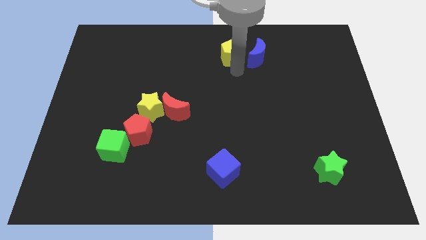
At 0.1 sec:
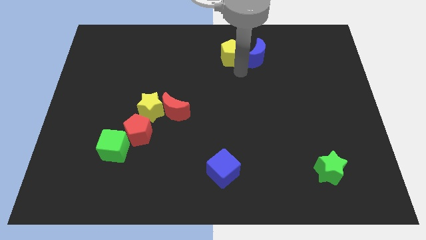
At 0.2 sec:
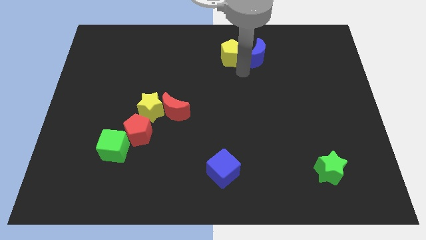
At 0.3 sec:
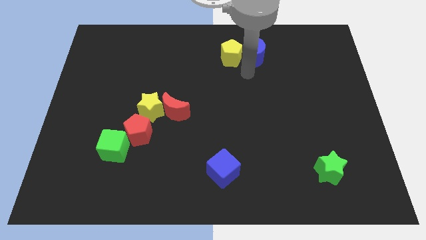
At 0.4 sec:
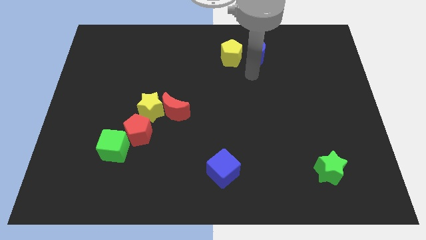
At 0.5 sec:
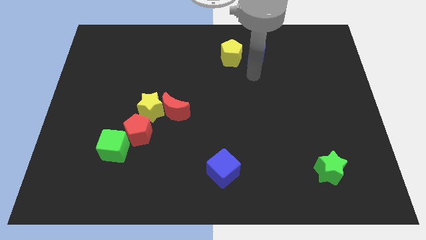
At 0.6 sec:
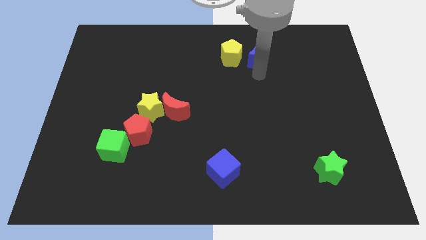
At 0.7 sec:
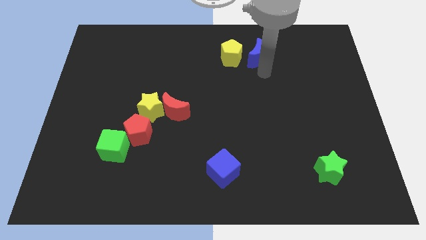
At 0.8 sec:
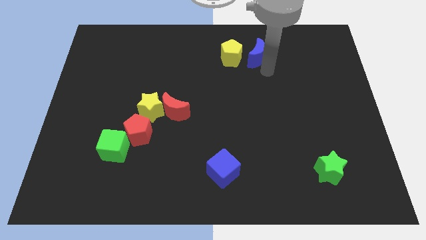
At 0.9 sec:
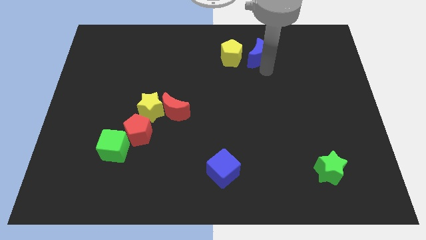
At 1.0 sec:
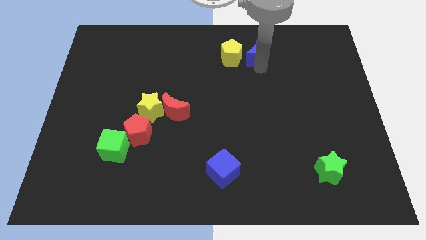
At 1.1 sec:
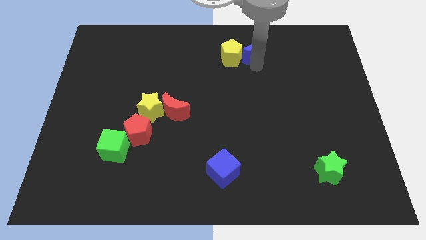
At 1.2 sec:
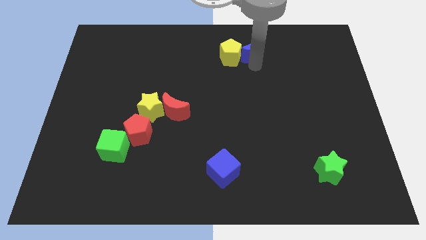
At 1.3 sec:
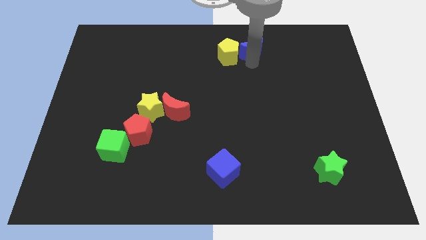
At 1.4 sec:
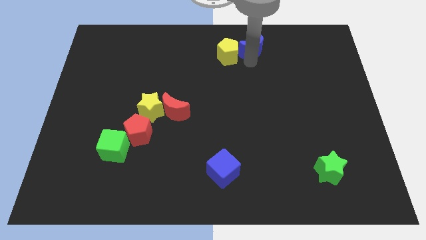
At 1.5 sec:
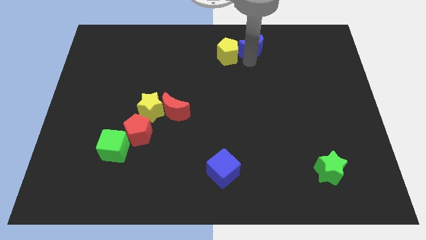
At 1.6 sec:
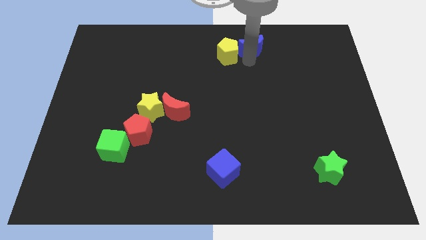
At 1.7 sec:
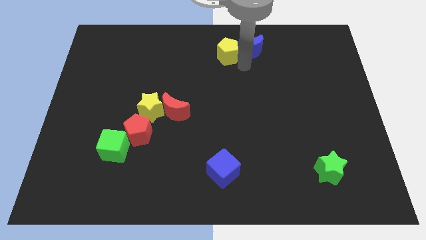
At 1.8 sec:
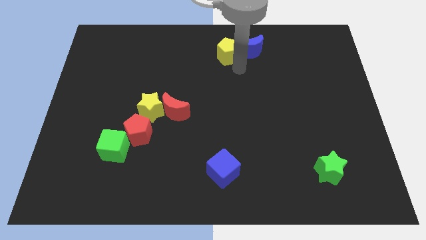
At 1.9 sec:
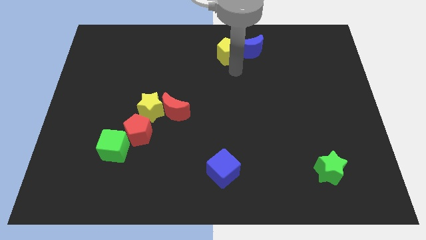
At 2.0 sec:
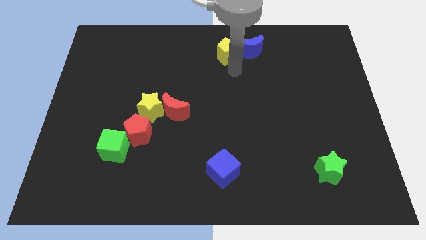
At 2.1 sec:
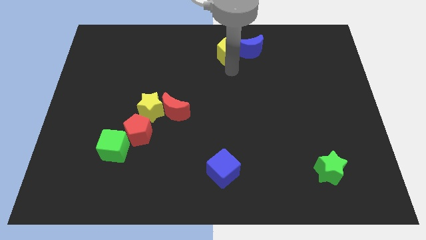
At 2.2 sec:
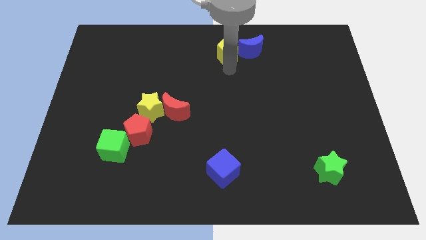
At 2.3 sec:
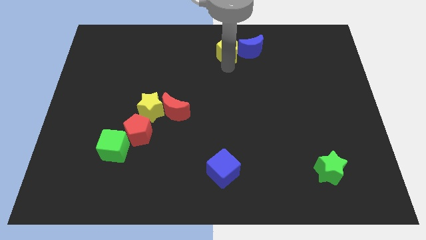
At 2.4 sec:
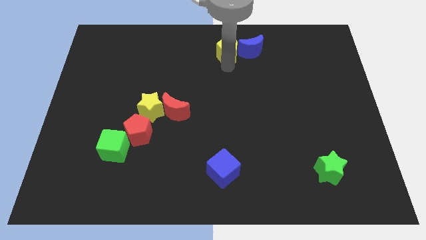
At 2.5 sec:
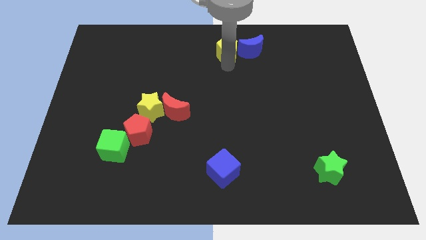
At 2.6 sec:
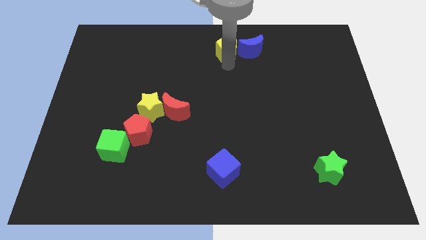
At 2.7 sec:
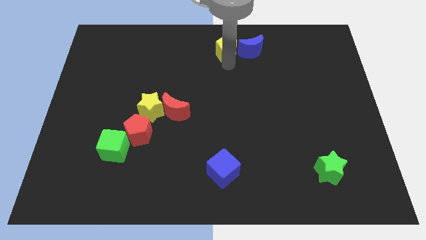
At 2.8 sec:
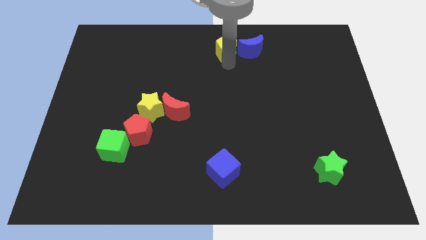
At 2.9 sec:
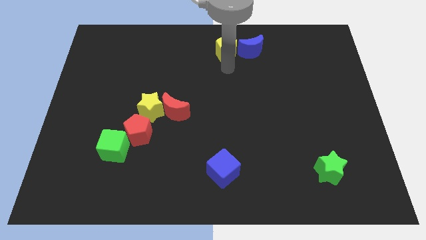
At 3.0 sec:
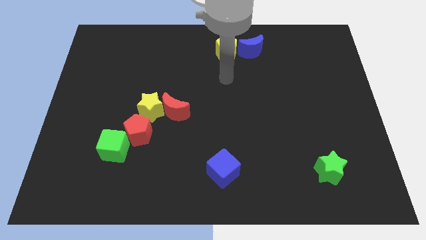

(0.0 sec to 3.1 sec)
slightly push the blue moon and yellow pentagon up

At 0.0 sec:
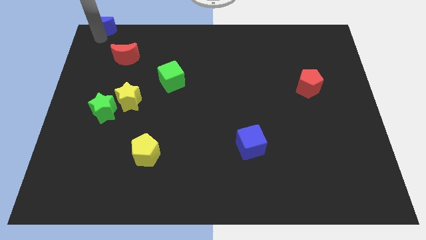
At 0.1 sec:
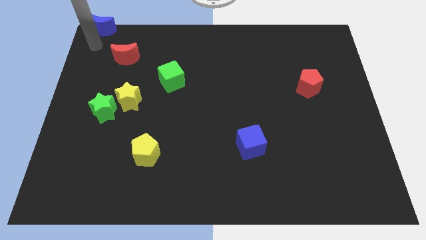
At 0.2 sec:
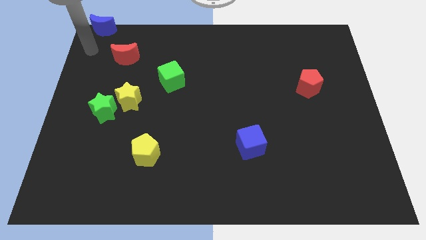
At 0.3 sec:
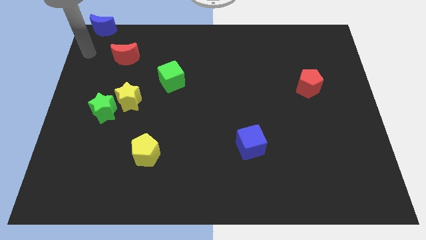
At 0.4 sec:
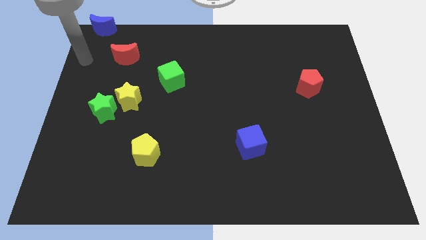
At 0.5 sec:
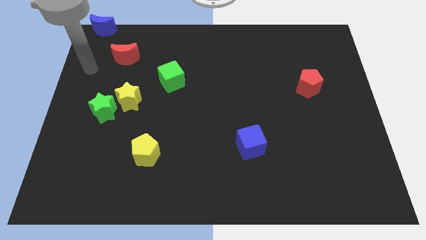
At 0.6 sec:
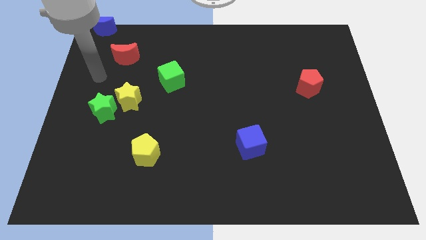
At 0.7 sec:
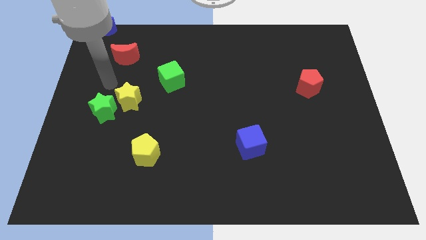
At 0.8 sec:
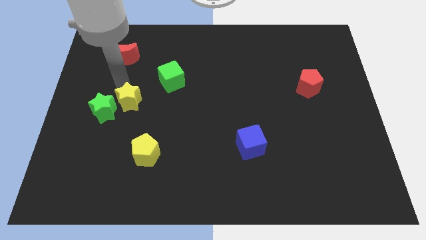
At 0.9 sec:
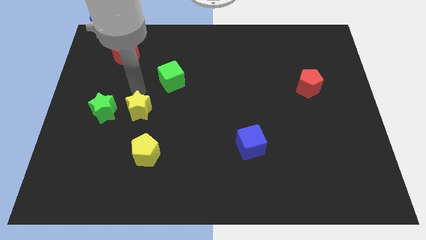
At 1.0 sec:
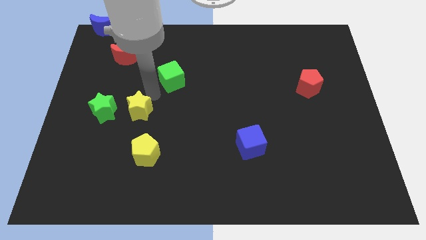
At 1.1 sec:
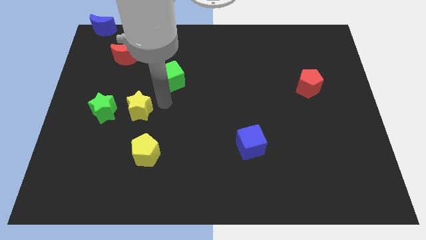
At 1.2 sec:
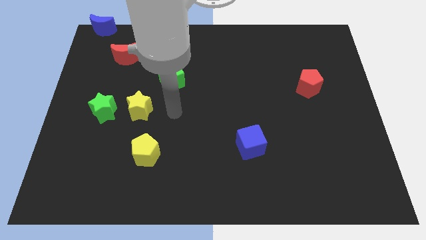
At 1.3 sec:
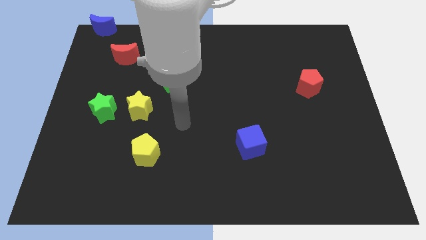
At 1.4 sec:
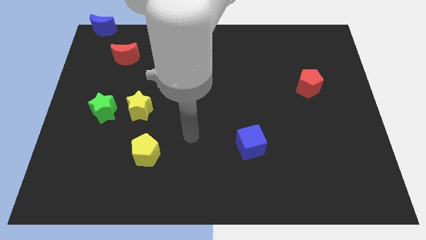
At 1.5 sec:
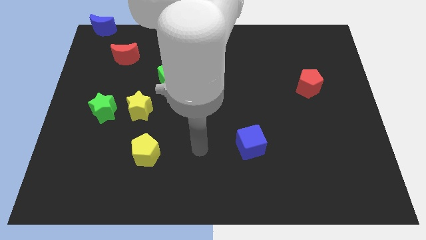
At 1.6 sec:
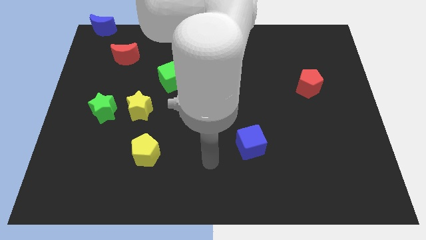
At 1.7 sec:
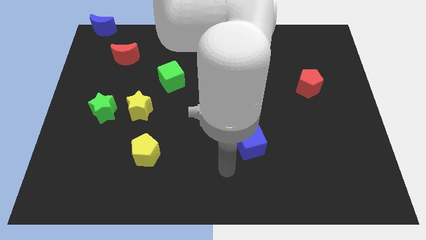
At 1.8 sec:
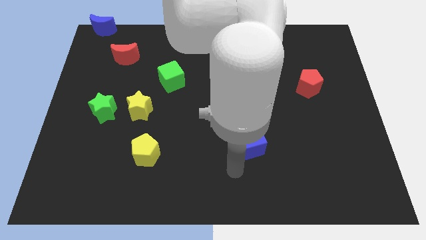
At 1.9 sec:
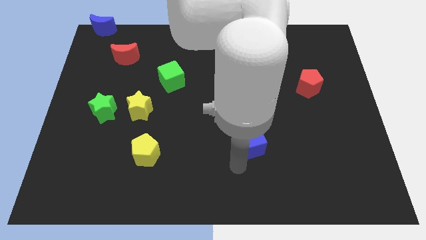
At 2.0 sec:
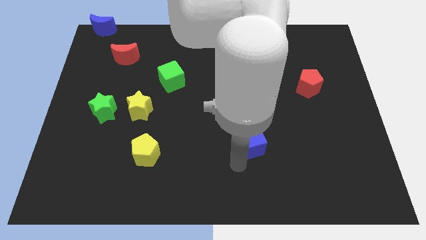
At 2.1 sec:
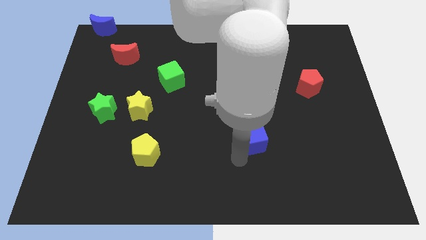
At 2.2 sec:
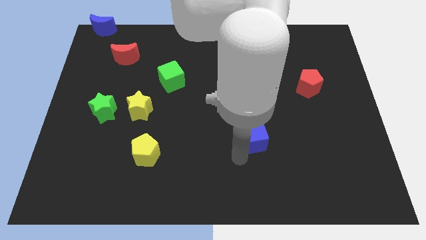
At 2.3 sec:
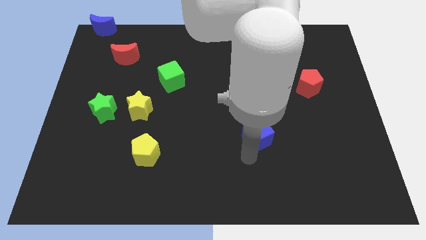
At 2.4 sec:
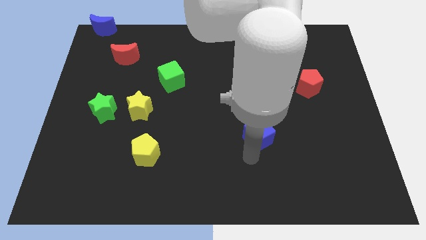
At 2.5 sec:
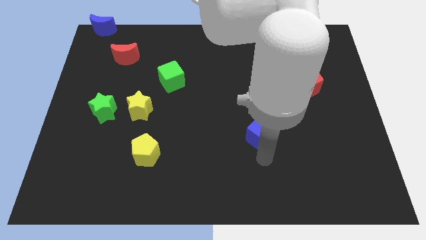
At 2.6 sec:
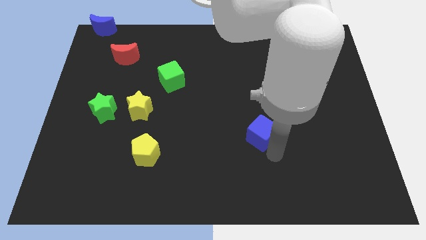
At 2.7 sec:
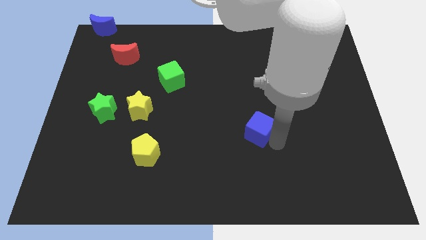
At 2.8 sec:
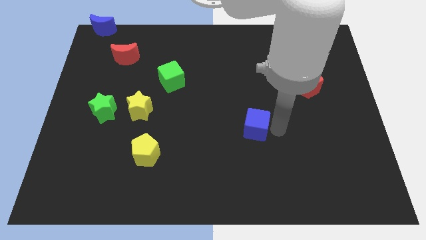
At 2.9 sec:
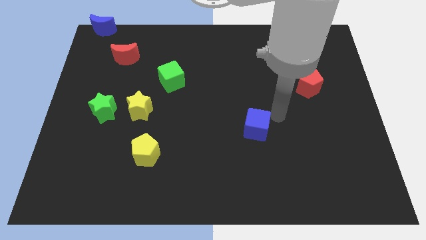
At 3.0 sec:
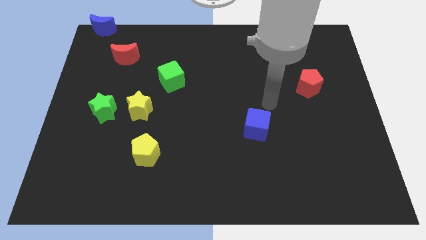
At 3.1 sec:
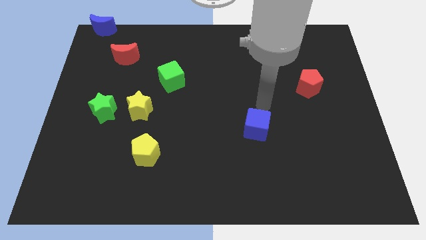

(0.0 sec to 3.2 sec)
move the blue cube towards the top

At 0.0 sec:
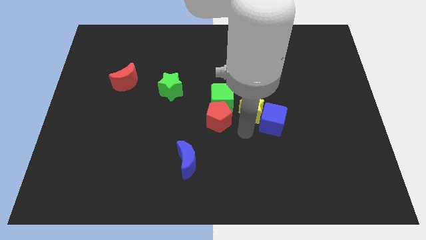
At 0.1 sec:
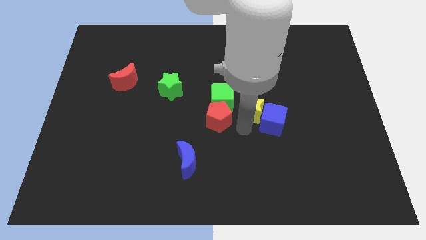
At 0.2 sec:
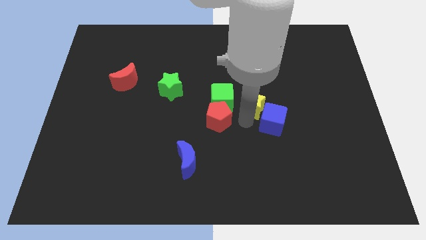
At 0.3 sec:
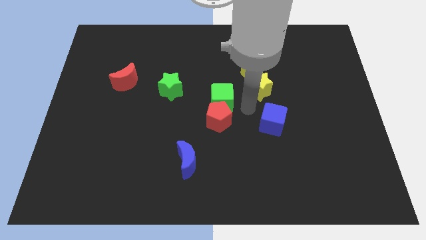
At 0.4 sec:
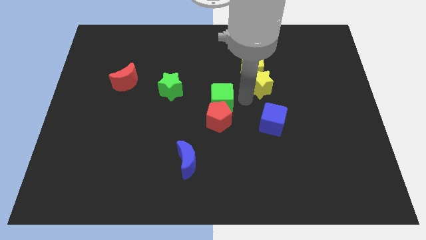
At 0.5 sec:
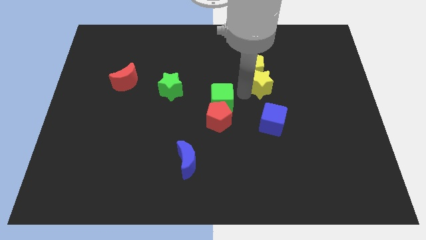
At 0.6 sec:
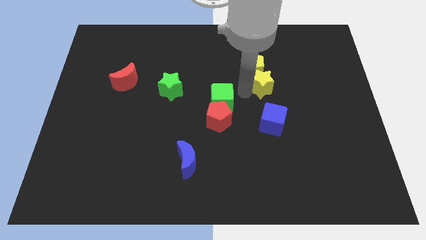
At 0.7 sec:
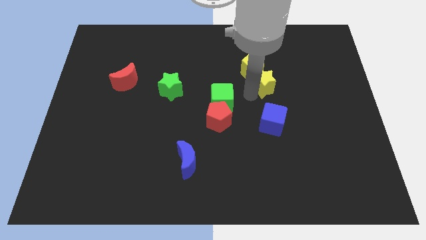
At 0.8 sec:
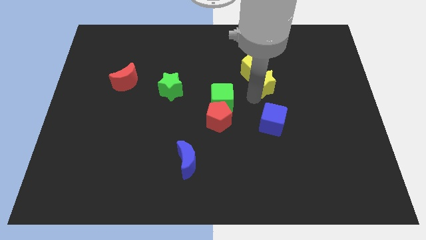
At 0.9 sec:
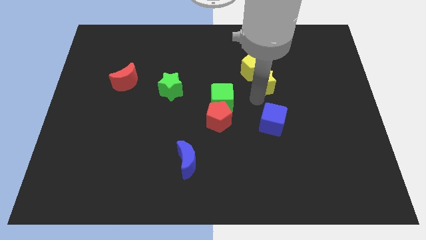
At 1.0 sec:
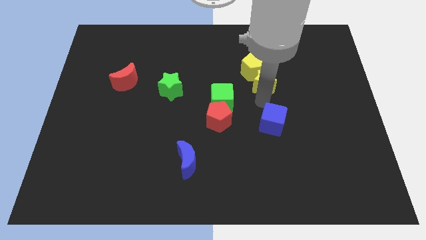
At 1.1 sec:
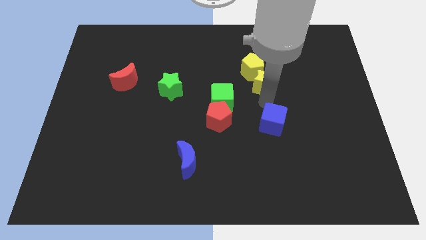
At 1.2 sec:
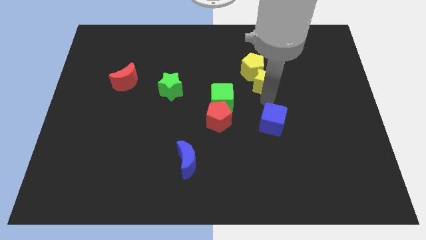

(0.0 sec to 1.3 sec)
move the yellow star into the yellow pentagon

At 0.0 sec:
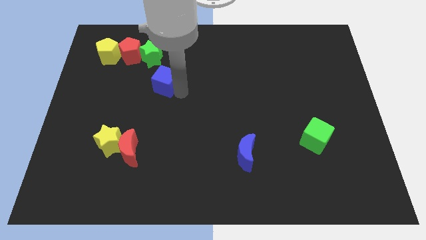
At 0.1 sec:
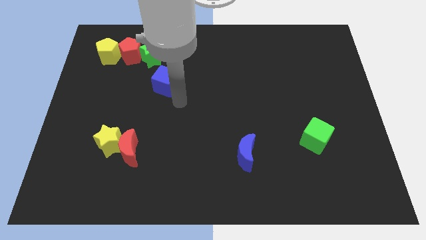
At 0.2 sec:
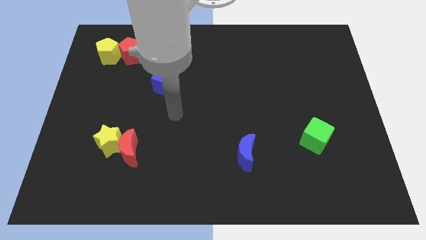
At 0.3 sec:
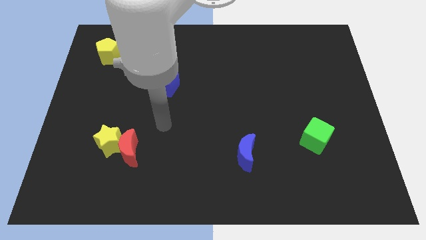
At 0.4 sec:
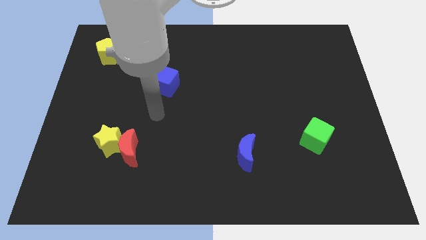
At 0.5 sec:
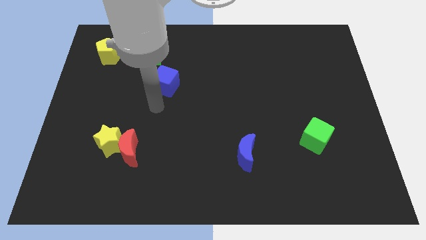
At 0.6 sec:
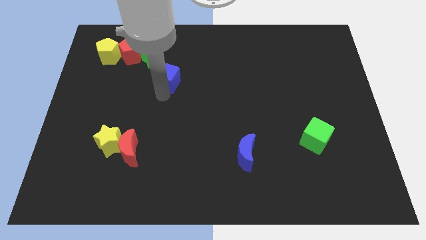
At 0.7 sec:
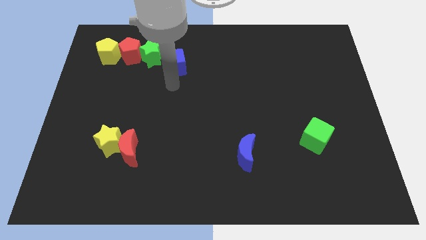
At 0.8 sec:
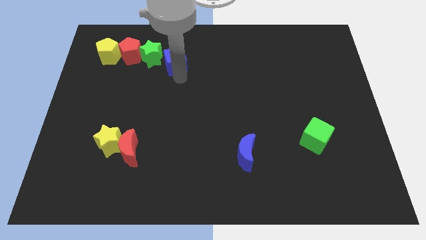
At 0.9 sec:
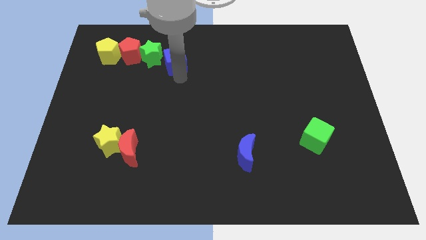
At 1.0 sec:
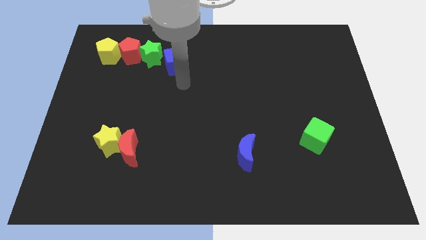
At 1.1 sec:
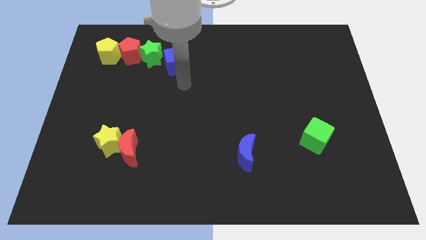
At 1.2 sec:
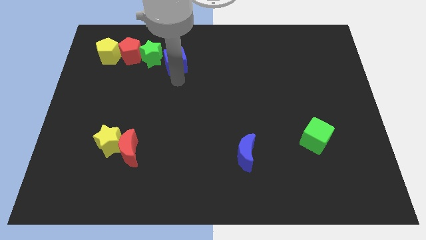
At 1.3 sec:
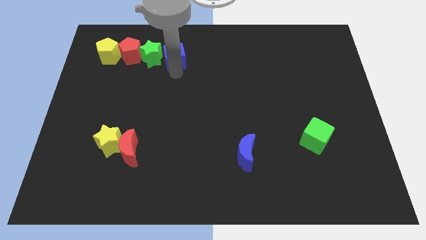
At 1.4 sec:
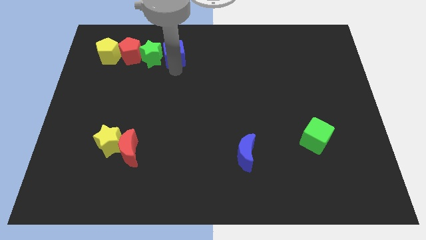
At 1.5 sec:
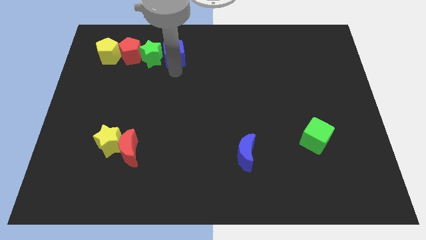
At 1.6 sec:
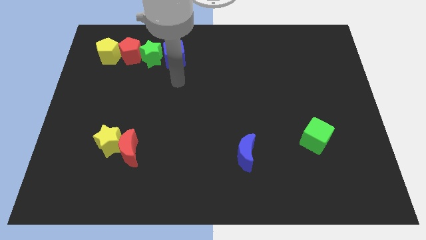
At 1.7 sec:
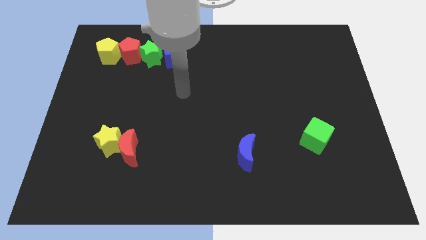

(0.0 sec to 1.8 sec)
place the blue cube to the right of the green star
